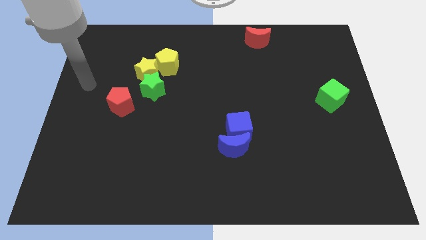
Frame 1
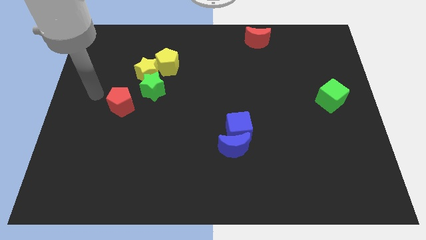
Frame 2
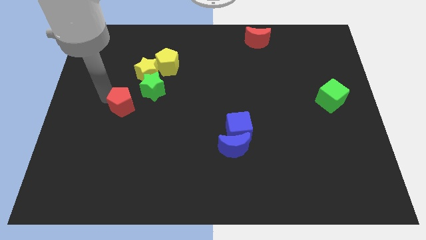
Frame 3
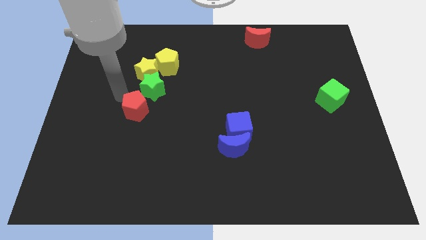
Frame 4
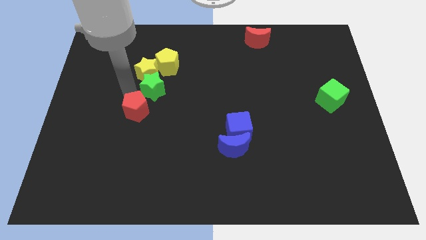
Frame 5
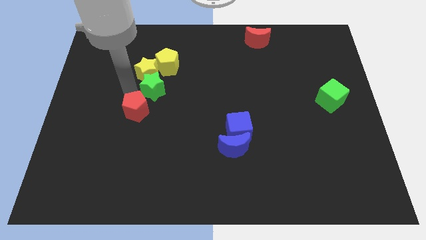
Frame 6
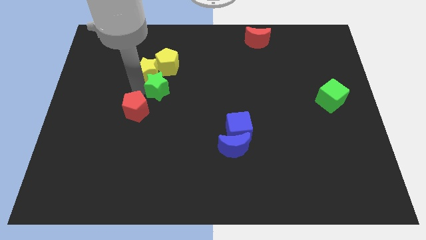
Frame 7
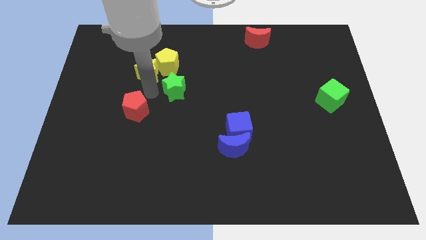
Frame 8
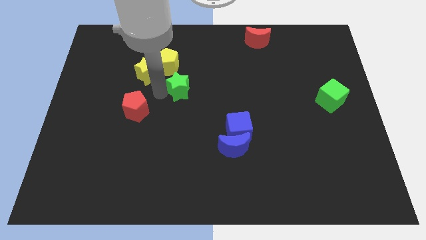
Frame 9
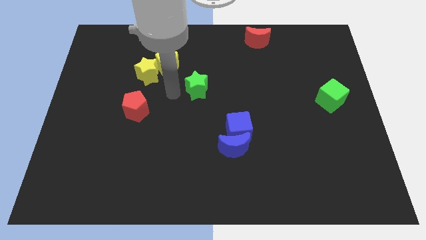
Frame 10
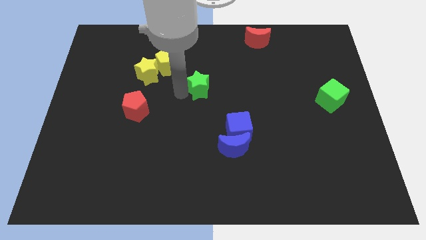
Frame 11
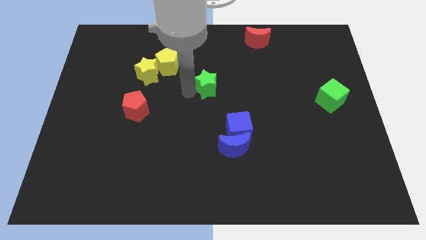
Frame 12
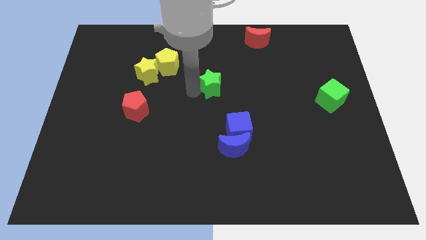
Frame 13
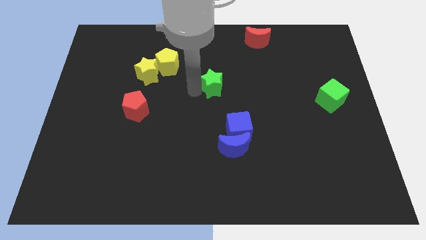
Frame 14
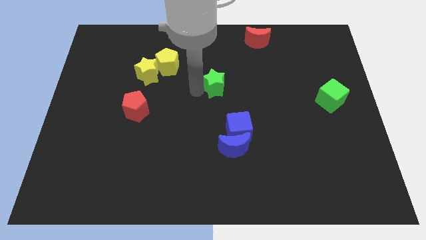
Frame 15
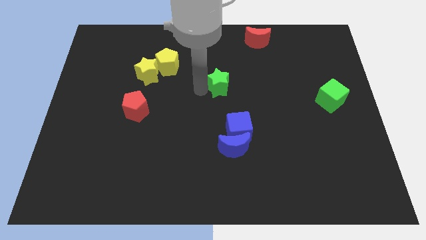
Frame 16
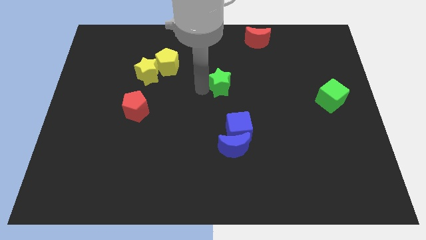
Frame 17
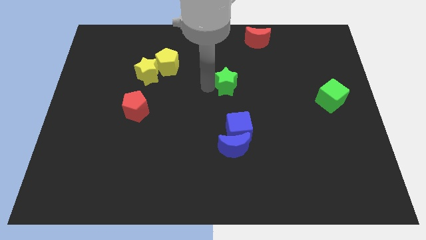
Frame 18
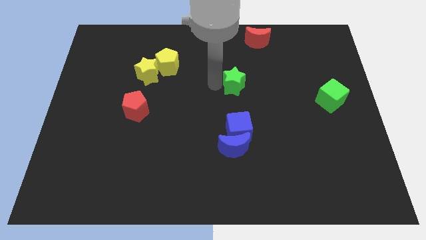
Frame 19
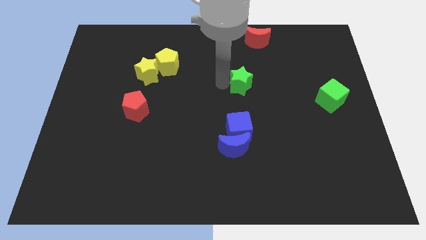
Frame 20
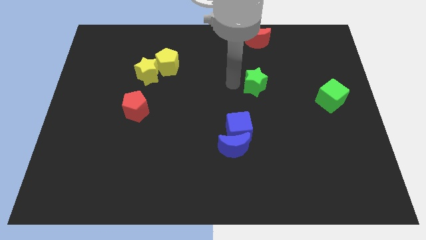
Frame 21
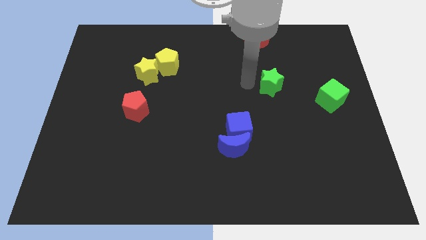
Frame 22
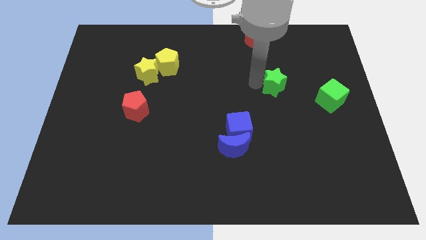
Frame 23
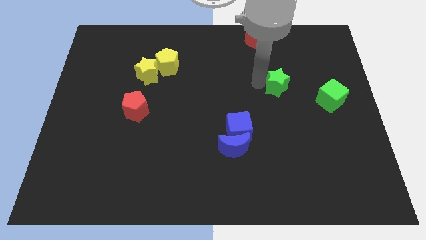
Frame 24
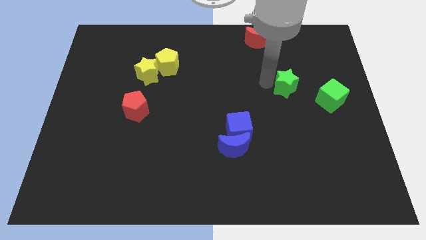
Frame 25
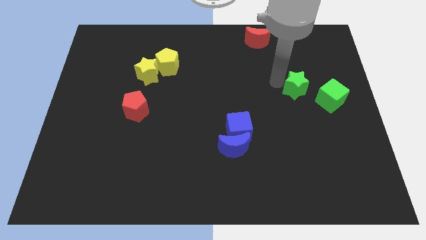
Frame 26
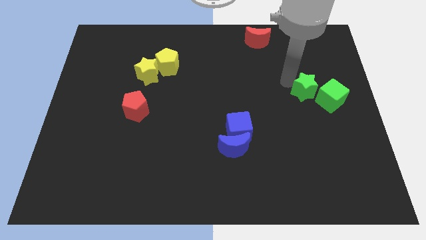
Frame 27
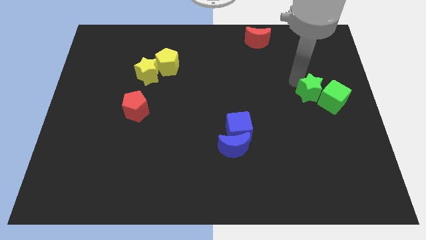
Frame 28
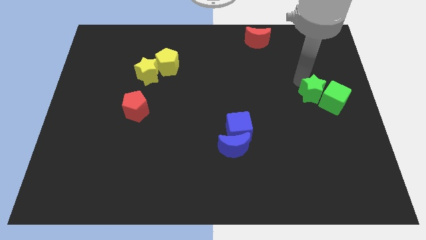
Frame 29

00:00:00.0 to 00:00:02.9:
move the green star into the green cube

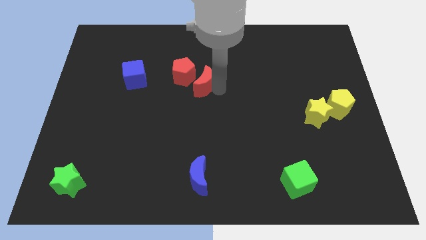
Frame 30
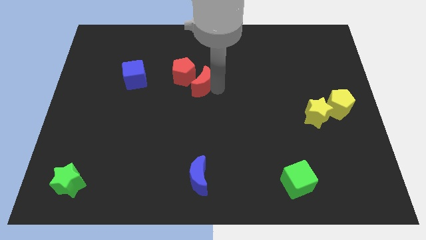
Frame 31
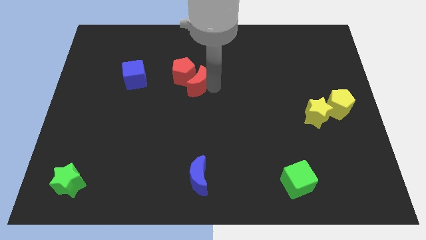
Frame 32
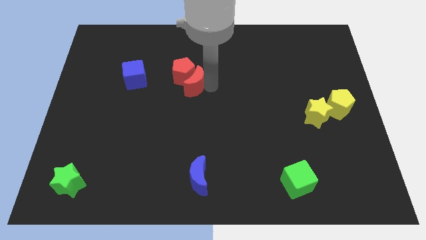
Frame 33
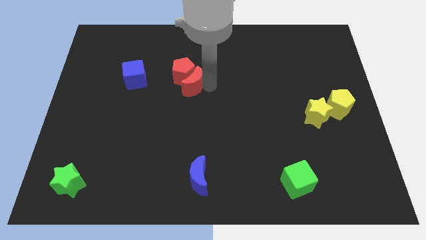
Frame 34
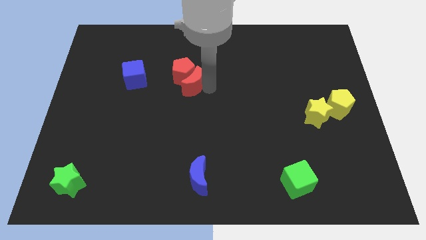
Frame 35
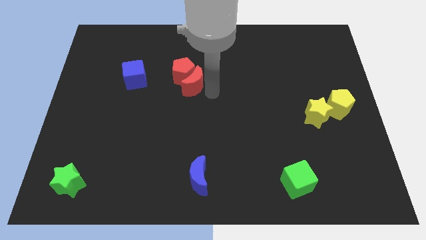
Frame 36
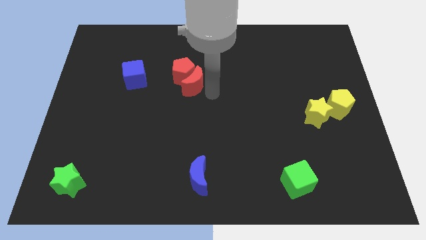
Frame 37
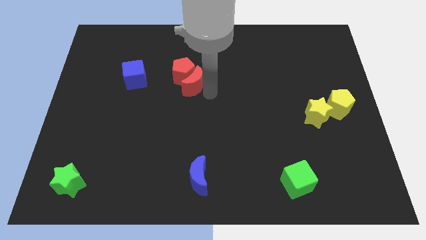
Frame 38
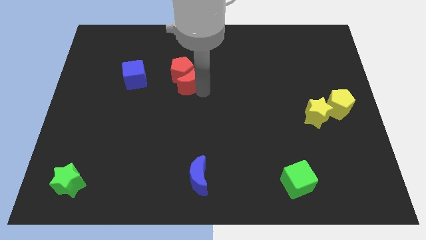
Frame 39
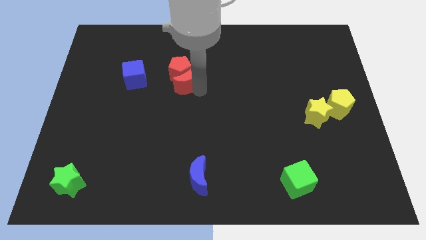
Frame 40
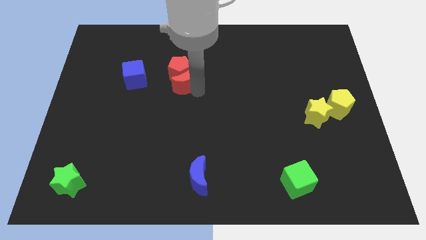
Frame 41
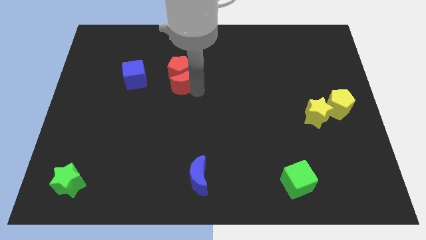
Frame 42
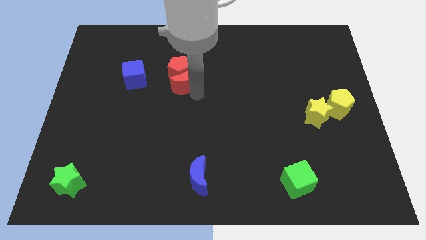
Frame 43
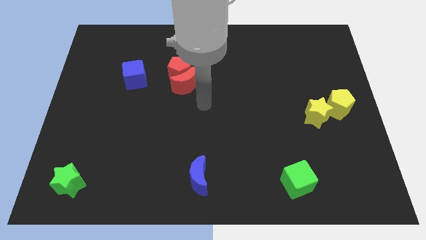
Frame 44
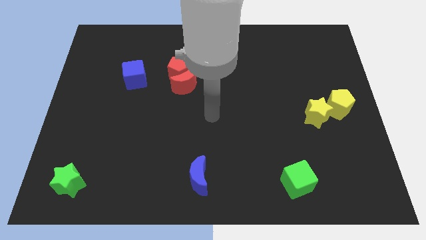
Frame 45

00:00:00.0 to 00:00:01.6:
move the red crescent to the bottom of the red pentagon

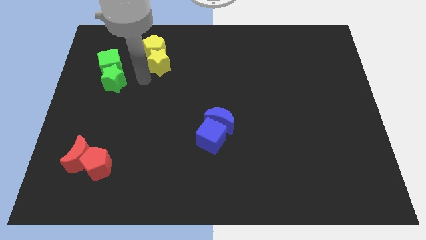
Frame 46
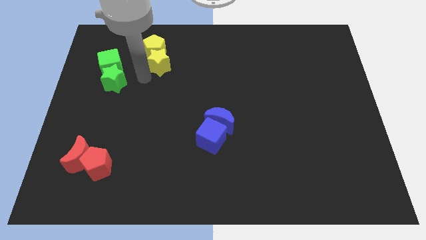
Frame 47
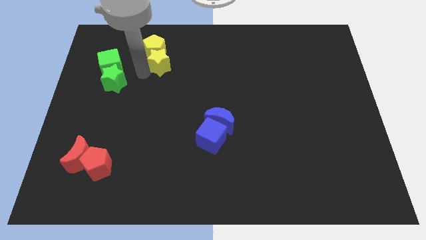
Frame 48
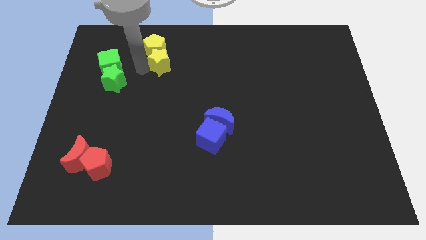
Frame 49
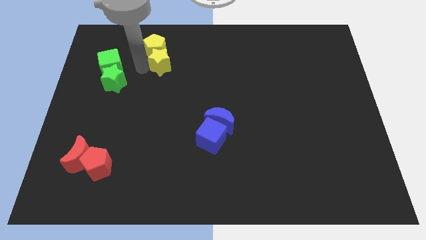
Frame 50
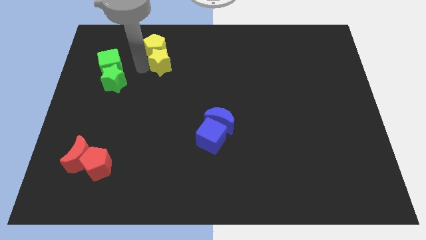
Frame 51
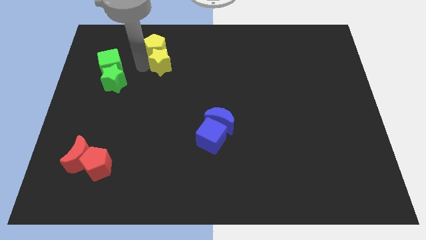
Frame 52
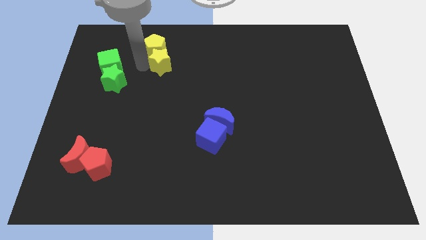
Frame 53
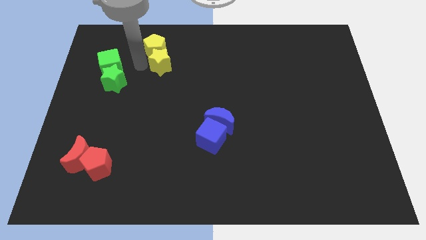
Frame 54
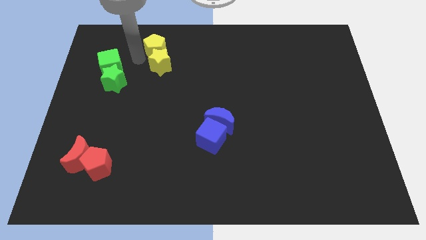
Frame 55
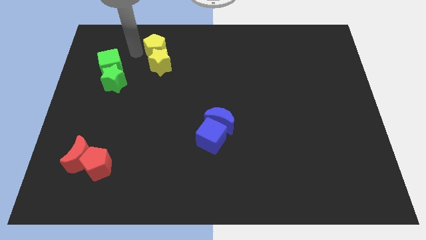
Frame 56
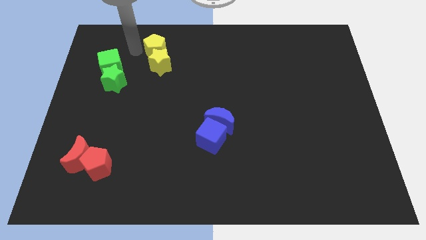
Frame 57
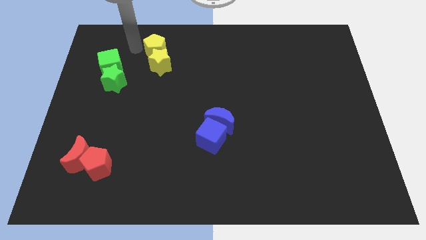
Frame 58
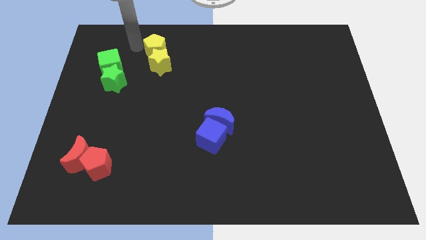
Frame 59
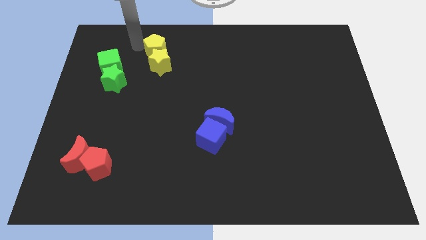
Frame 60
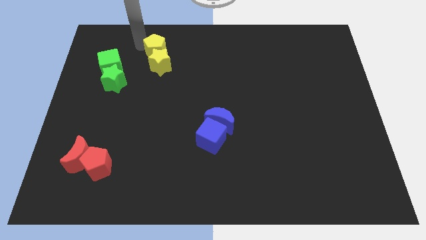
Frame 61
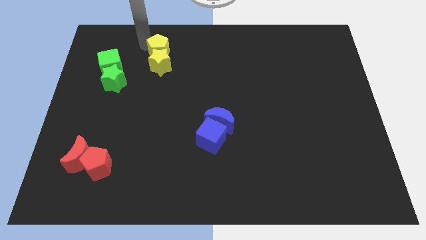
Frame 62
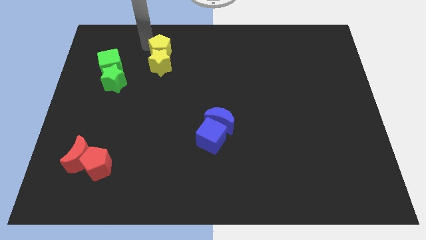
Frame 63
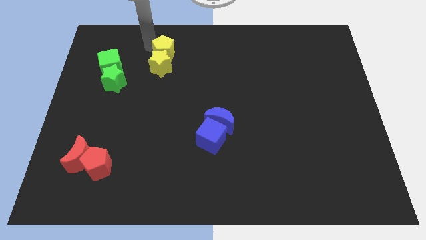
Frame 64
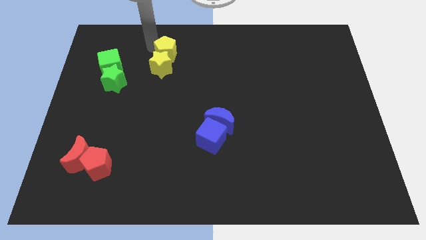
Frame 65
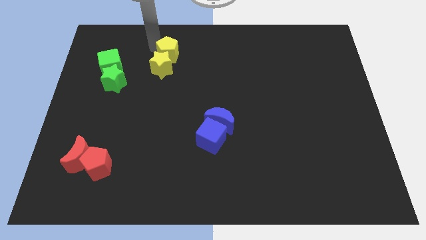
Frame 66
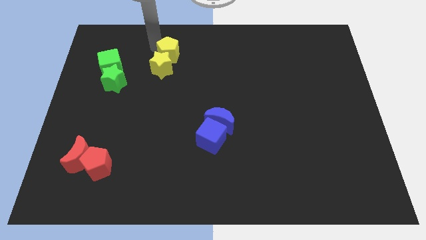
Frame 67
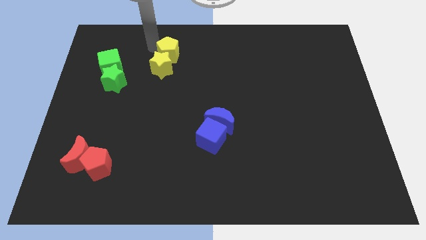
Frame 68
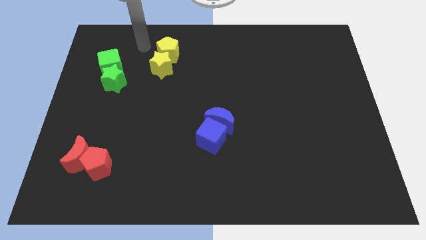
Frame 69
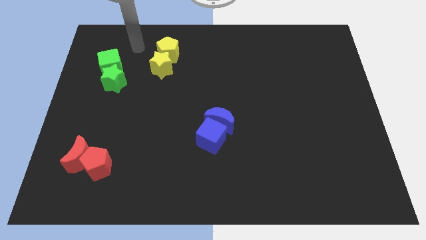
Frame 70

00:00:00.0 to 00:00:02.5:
slightly push the yellow blocks towards the right side

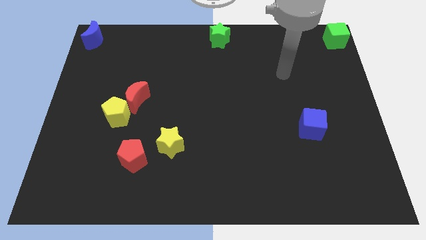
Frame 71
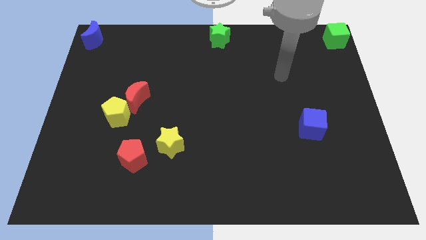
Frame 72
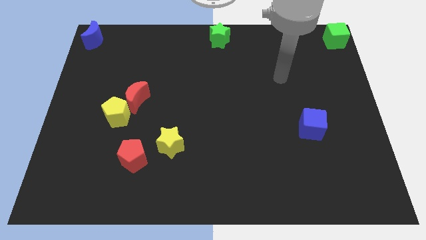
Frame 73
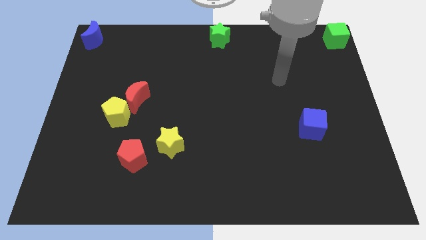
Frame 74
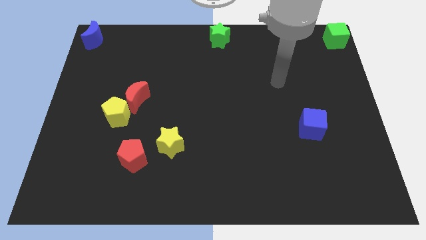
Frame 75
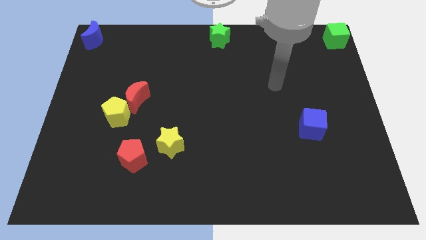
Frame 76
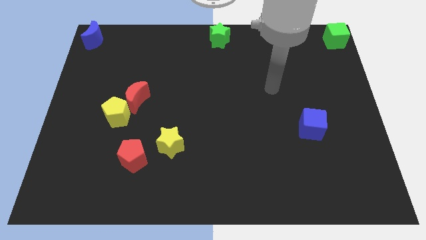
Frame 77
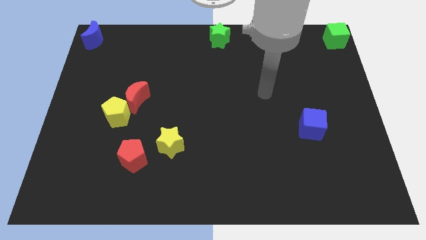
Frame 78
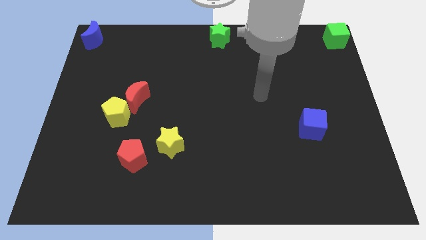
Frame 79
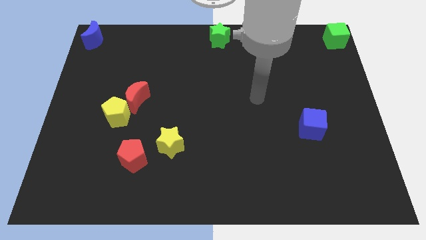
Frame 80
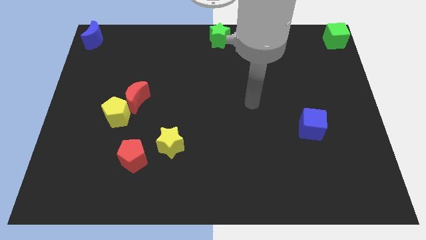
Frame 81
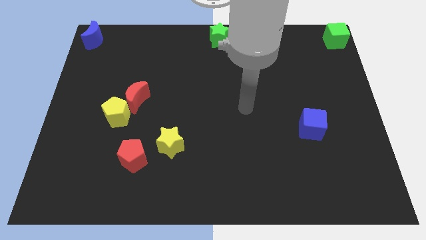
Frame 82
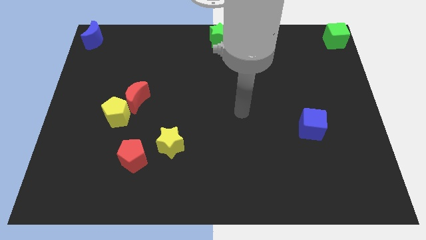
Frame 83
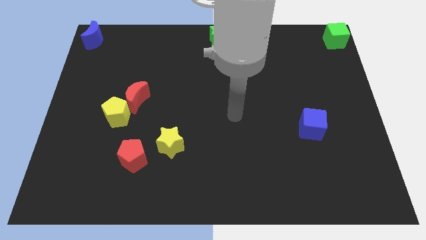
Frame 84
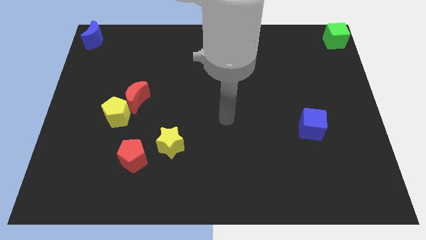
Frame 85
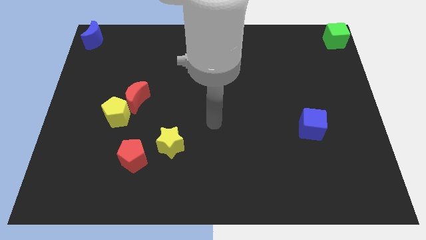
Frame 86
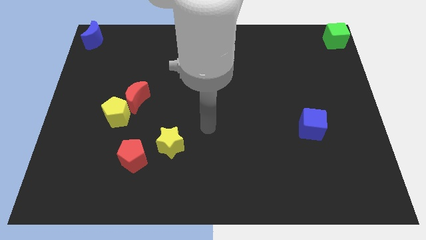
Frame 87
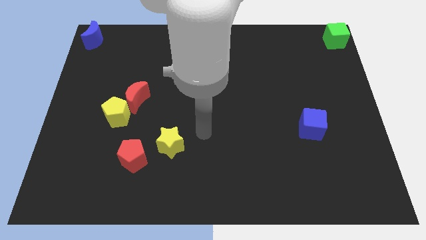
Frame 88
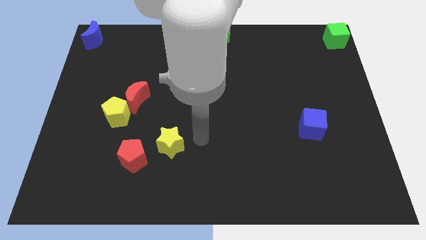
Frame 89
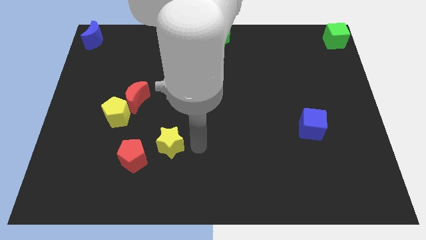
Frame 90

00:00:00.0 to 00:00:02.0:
move your arm towards the yellow star

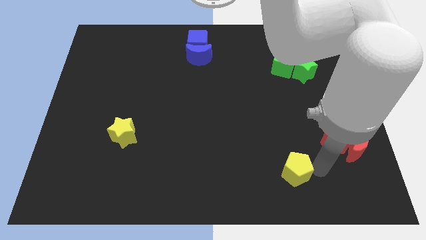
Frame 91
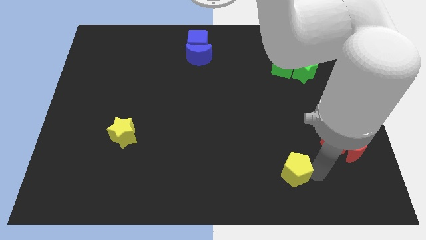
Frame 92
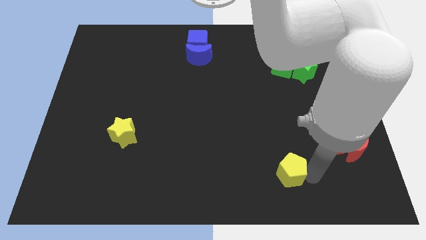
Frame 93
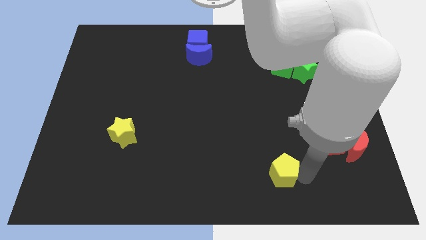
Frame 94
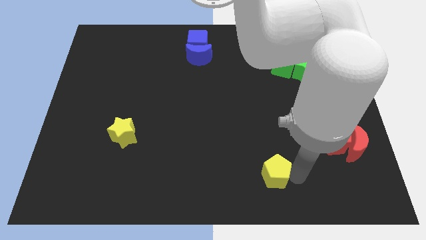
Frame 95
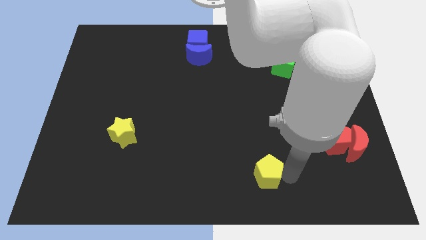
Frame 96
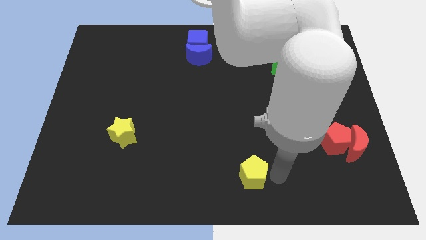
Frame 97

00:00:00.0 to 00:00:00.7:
slightly move the yellow pentagon towards the bottom center of the board
